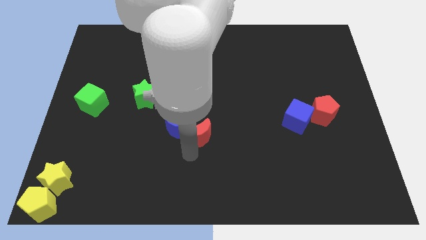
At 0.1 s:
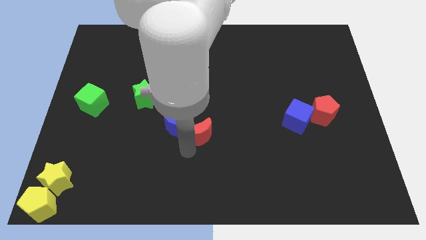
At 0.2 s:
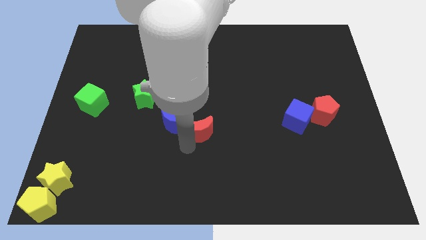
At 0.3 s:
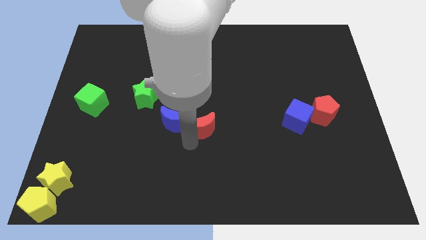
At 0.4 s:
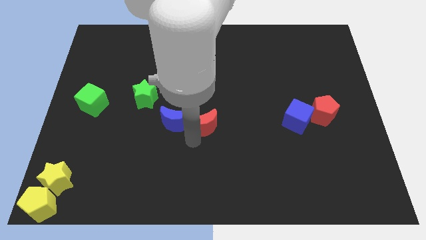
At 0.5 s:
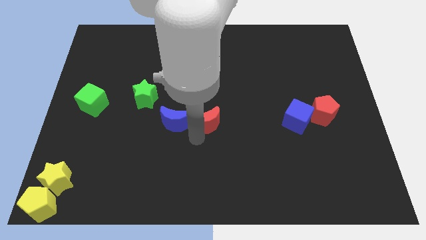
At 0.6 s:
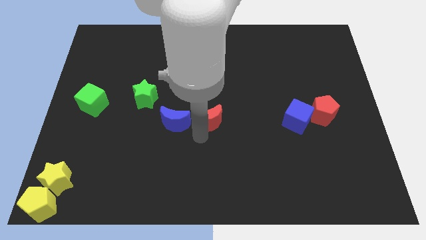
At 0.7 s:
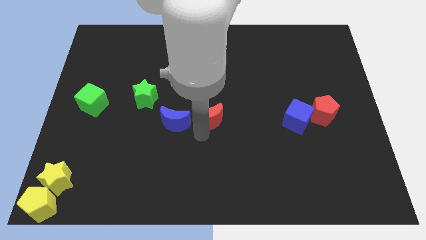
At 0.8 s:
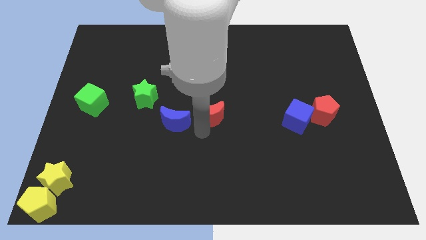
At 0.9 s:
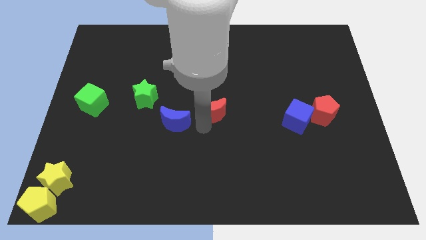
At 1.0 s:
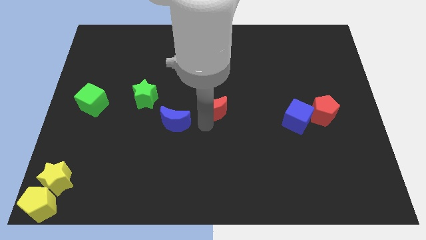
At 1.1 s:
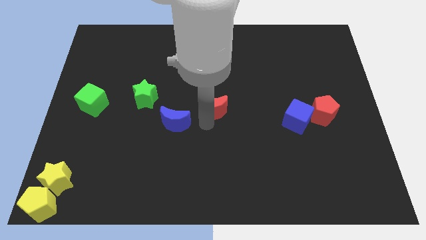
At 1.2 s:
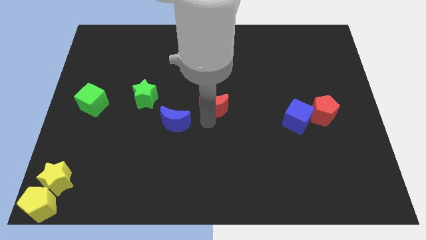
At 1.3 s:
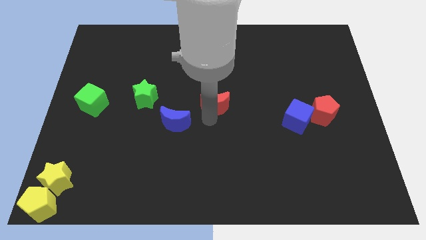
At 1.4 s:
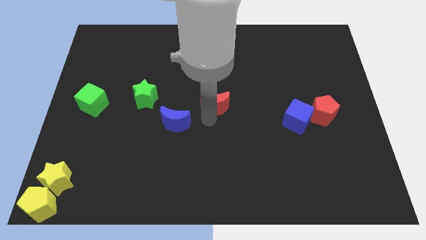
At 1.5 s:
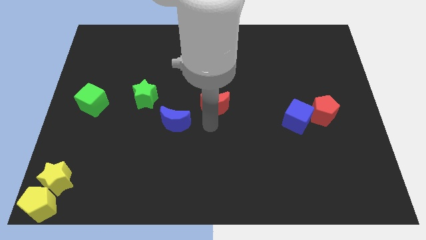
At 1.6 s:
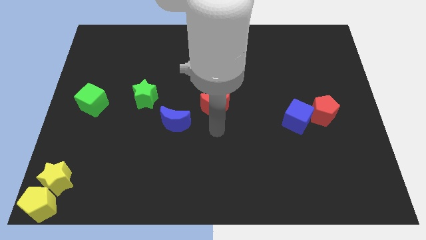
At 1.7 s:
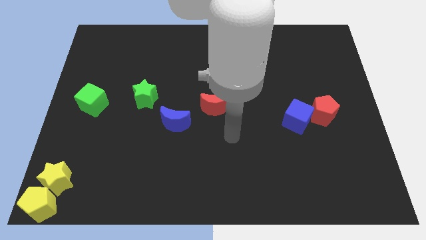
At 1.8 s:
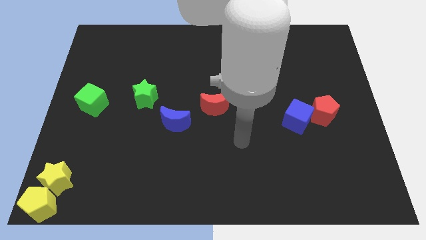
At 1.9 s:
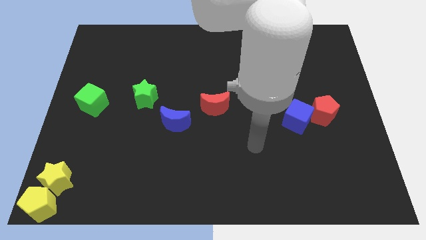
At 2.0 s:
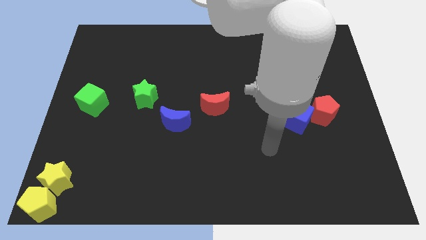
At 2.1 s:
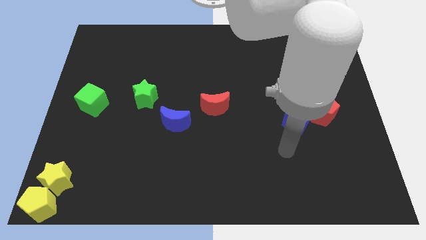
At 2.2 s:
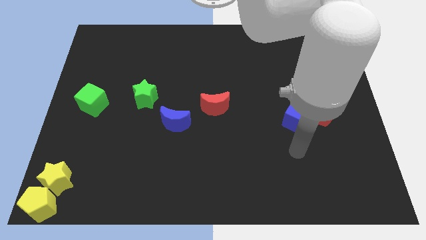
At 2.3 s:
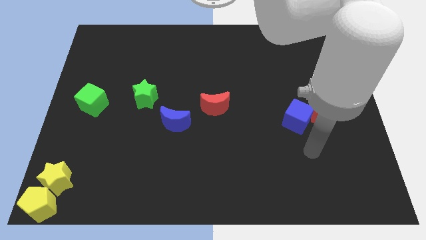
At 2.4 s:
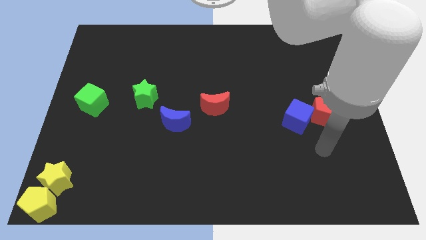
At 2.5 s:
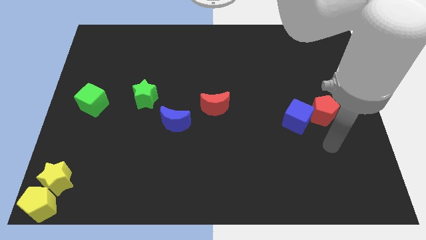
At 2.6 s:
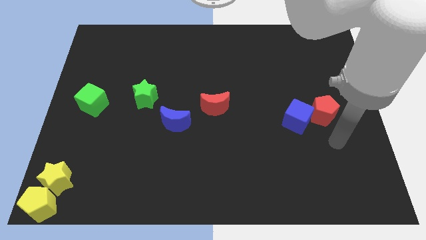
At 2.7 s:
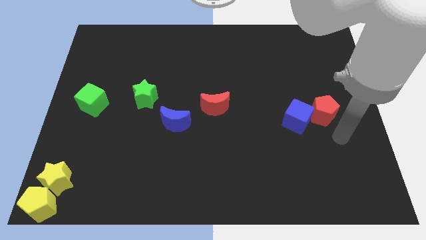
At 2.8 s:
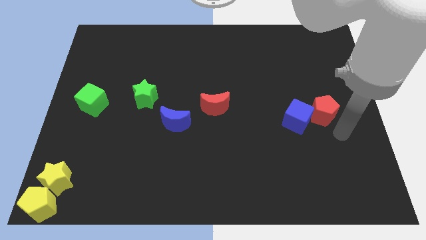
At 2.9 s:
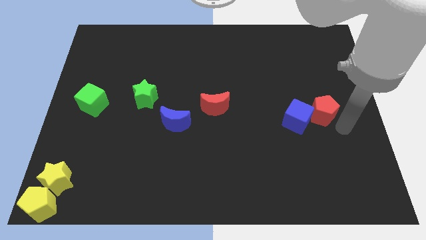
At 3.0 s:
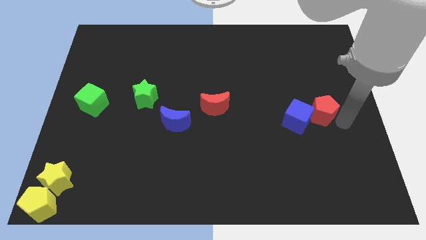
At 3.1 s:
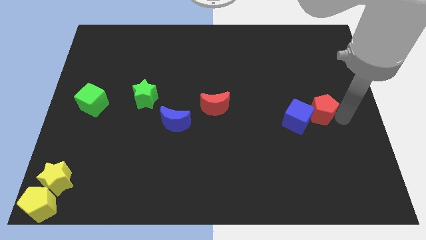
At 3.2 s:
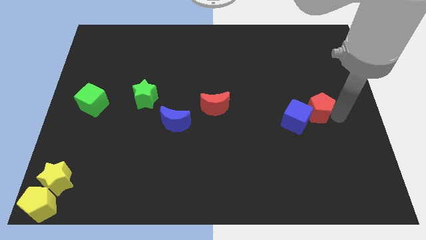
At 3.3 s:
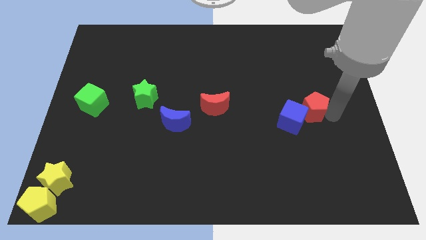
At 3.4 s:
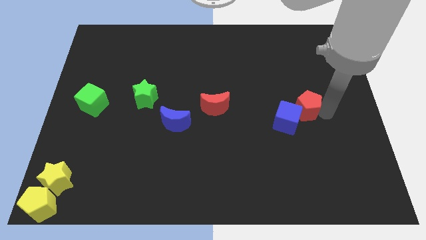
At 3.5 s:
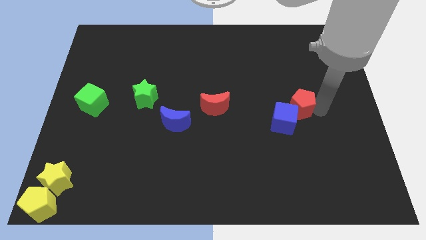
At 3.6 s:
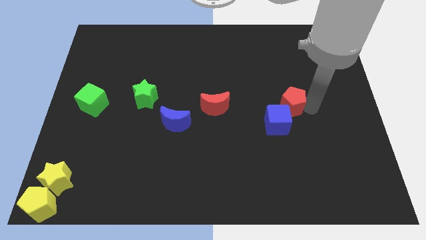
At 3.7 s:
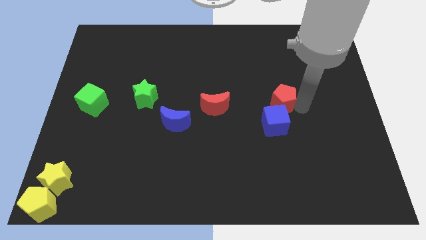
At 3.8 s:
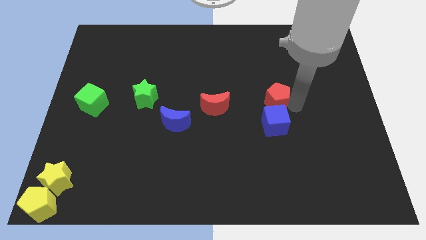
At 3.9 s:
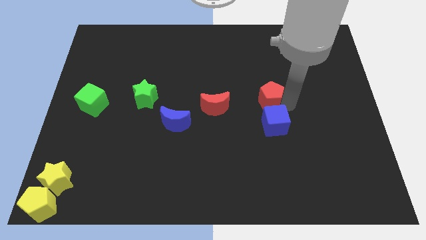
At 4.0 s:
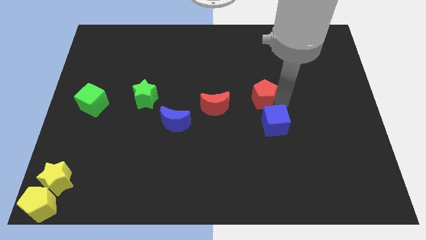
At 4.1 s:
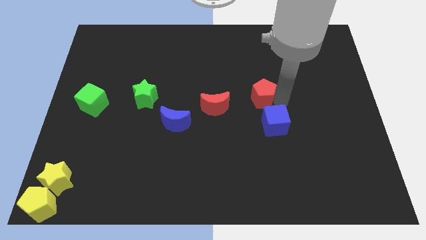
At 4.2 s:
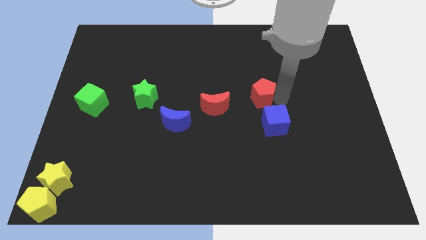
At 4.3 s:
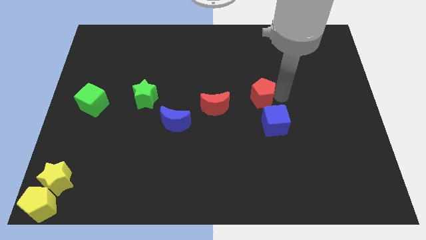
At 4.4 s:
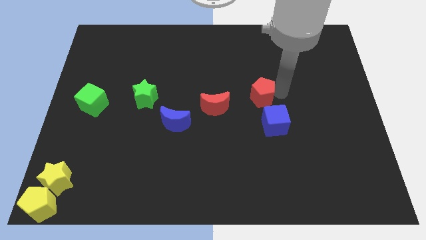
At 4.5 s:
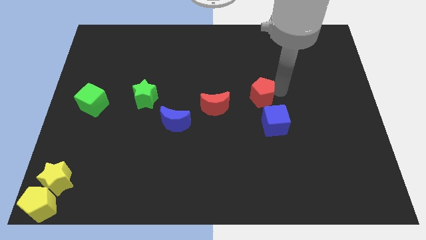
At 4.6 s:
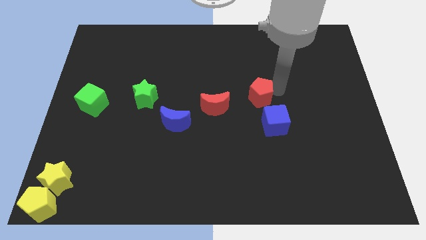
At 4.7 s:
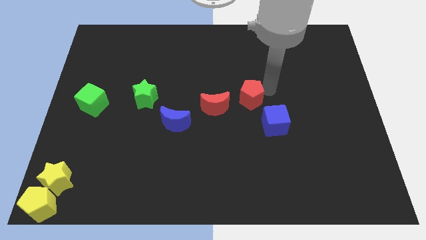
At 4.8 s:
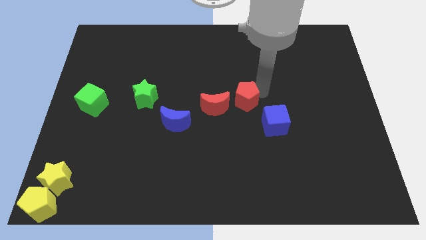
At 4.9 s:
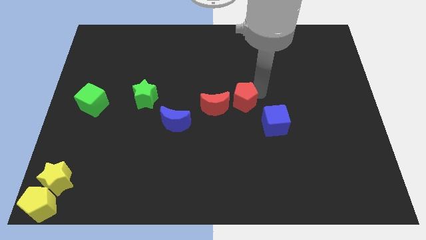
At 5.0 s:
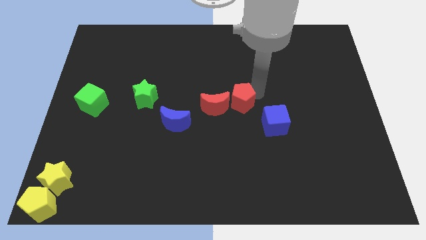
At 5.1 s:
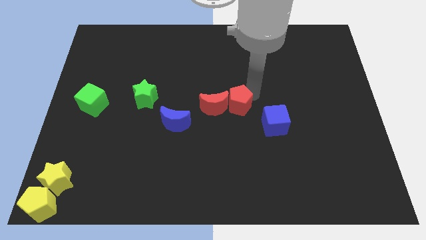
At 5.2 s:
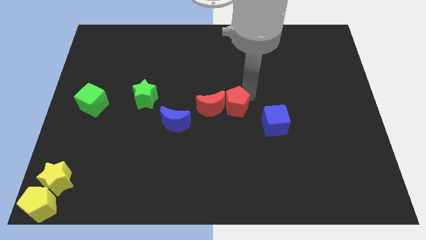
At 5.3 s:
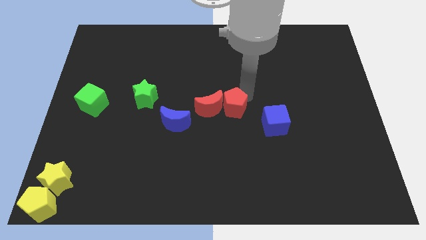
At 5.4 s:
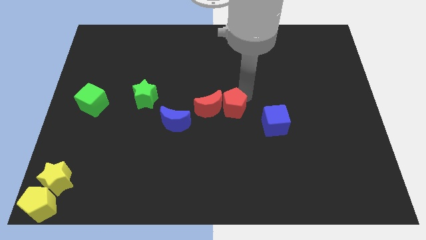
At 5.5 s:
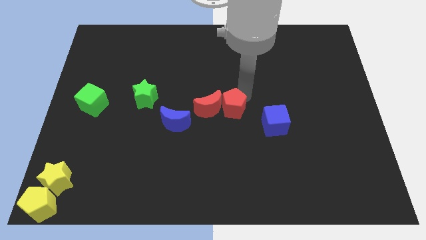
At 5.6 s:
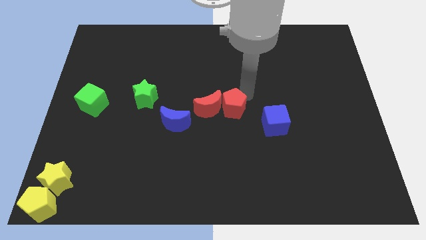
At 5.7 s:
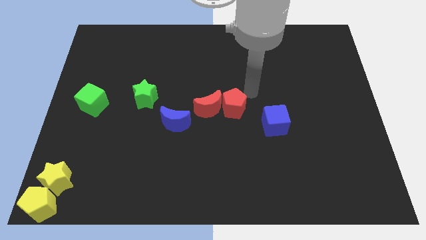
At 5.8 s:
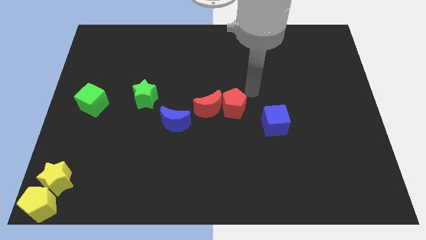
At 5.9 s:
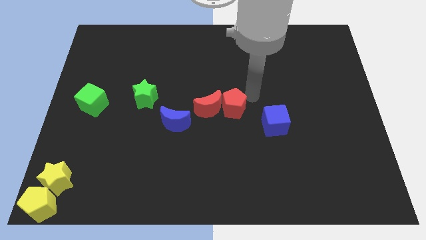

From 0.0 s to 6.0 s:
push the red pentagon towards the red crescent

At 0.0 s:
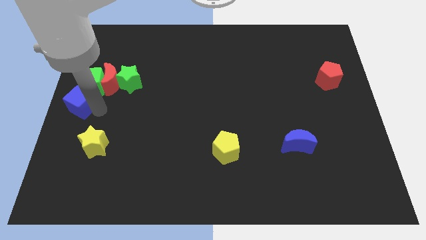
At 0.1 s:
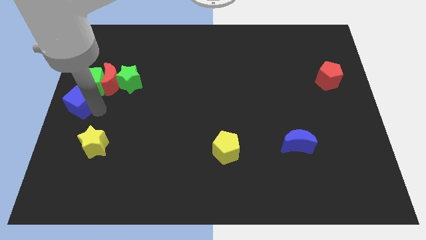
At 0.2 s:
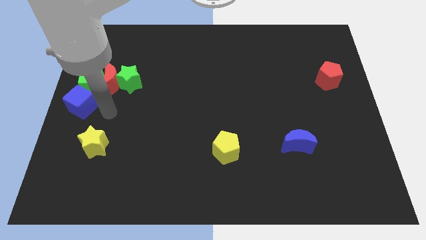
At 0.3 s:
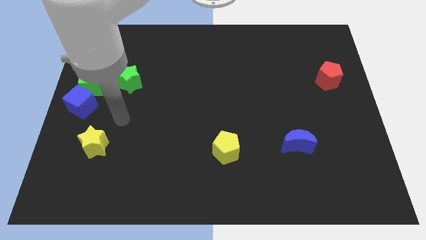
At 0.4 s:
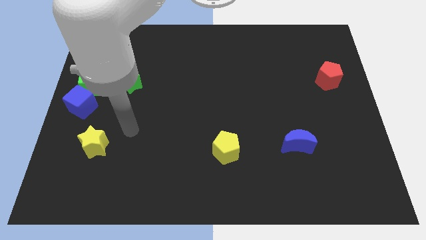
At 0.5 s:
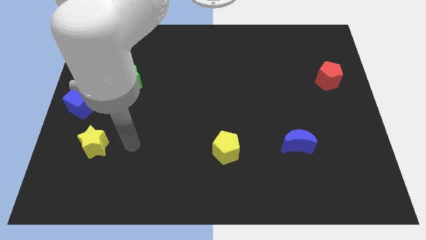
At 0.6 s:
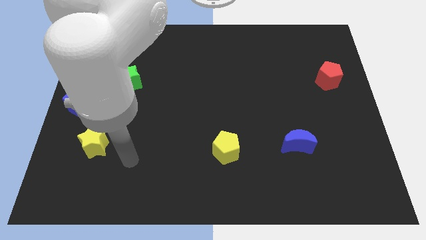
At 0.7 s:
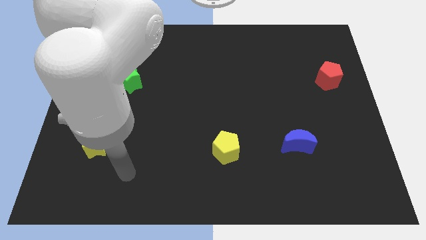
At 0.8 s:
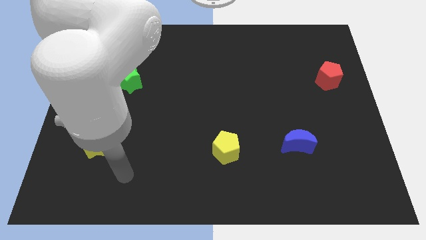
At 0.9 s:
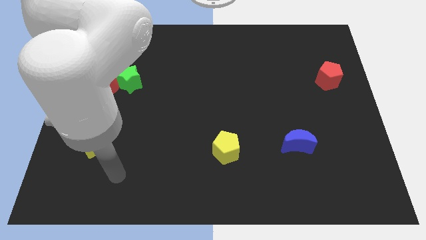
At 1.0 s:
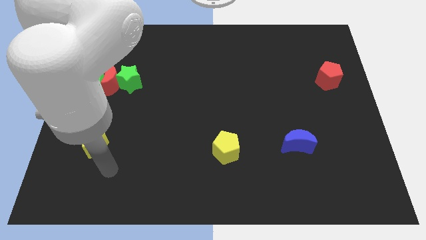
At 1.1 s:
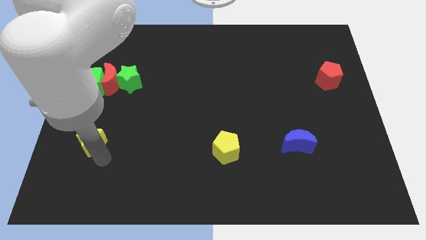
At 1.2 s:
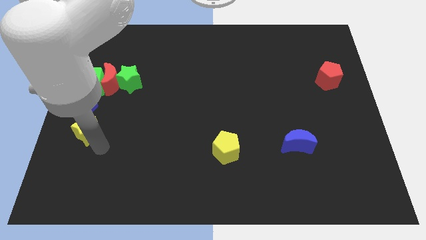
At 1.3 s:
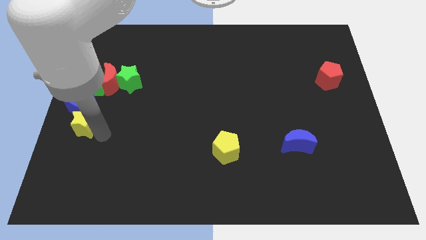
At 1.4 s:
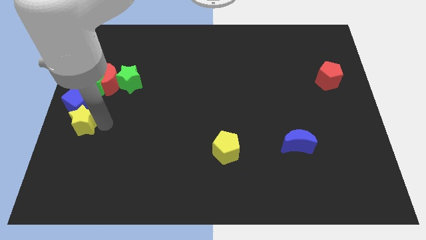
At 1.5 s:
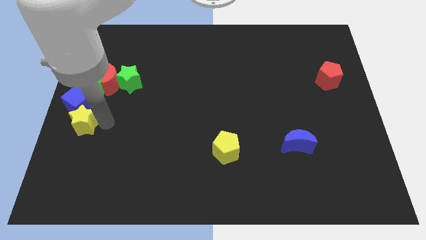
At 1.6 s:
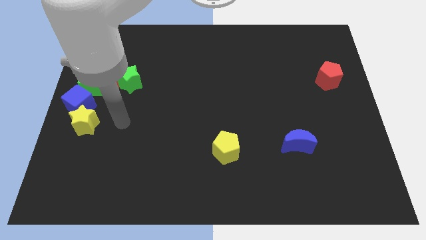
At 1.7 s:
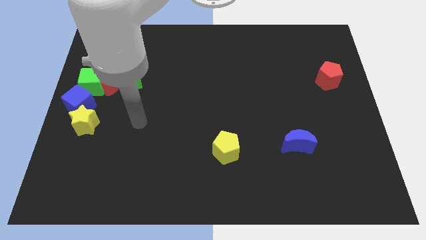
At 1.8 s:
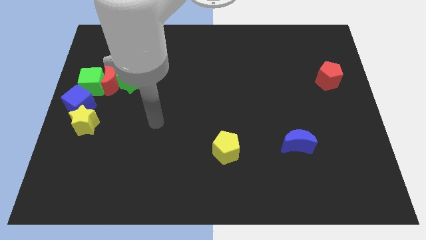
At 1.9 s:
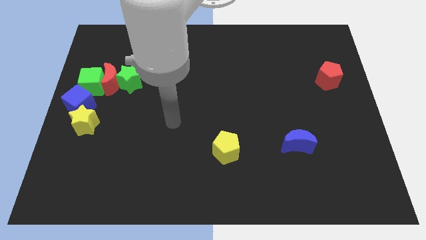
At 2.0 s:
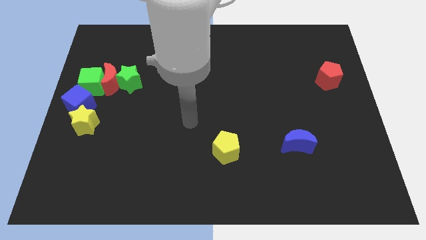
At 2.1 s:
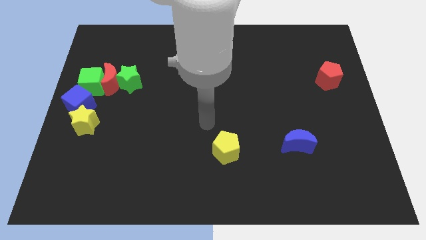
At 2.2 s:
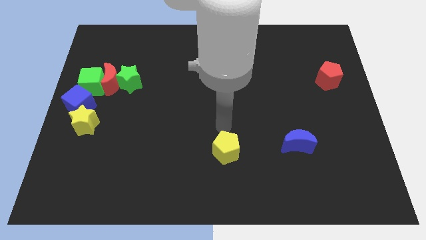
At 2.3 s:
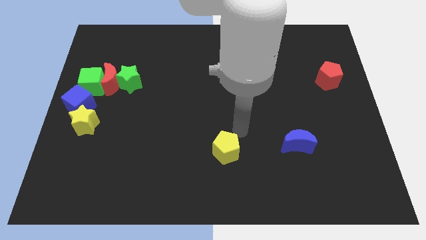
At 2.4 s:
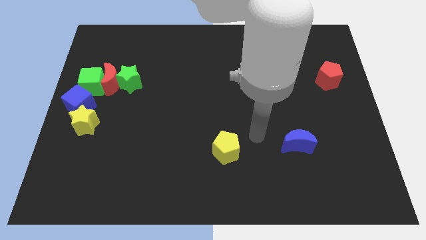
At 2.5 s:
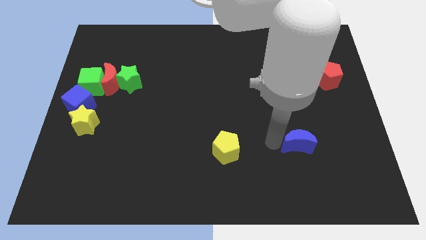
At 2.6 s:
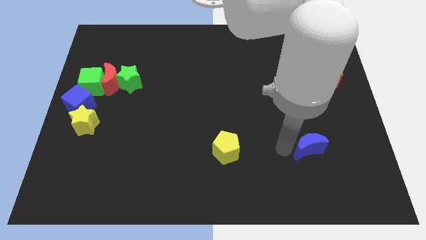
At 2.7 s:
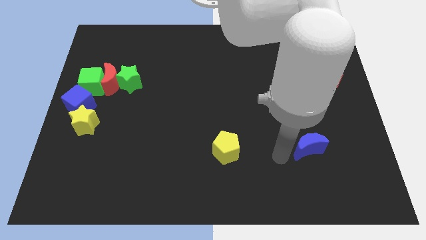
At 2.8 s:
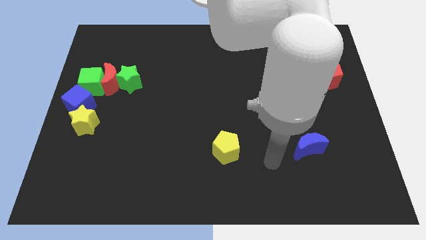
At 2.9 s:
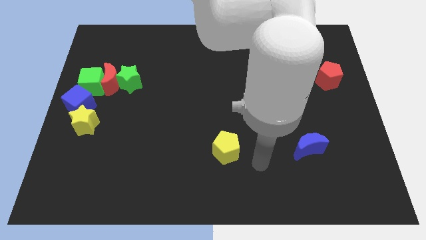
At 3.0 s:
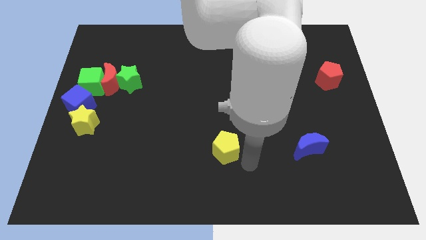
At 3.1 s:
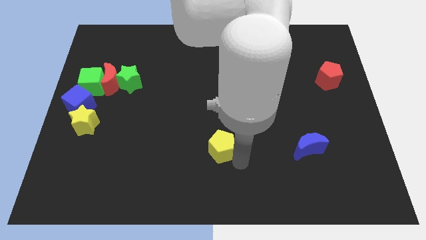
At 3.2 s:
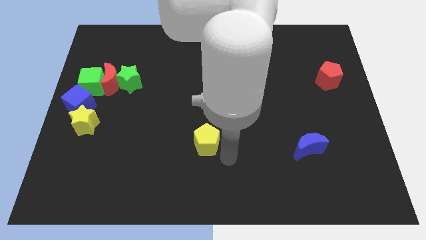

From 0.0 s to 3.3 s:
move your arm towards the blue crescent
